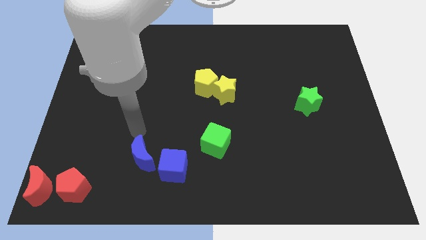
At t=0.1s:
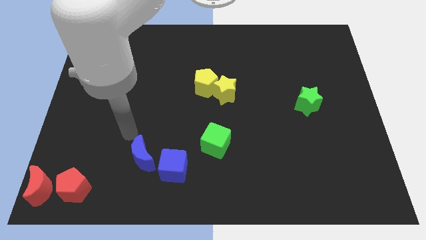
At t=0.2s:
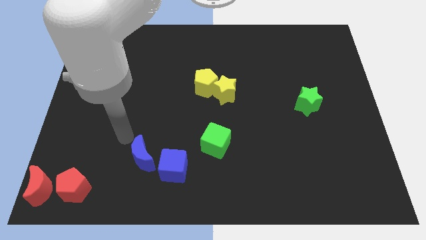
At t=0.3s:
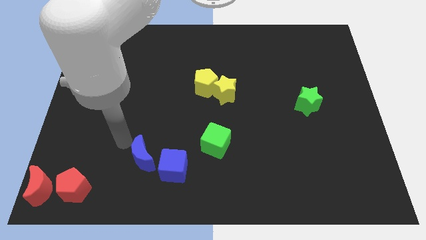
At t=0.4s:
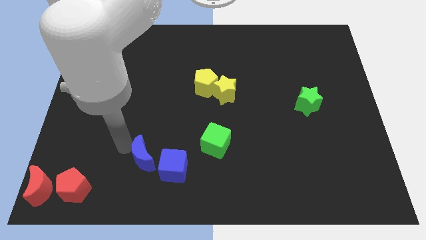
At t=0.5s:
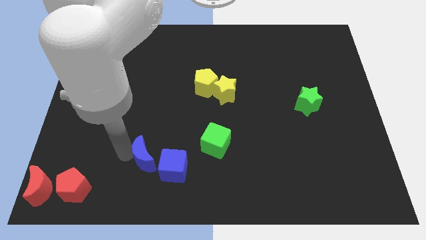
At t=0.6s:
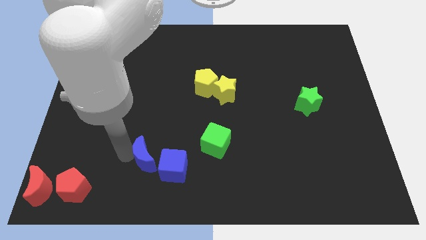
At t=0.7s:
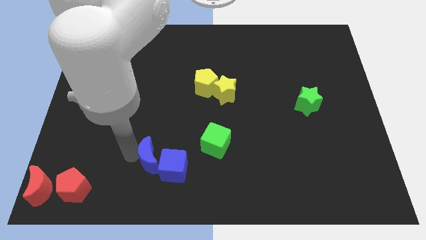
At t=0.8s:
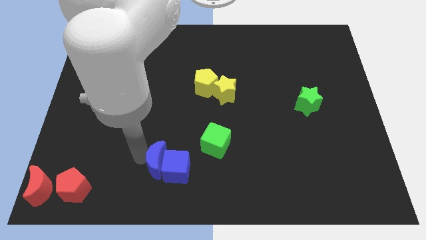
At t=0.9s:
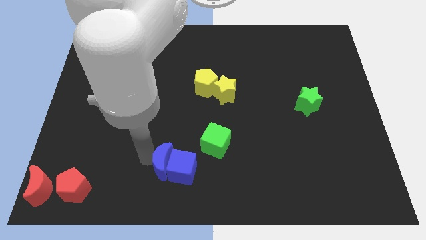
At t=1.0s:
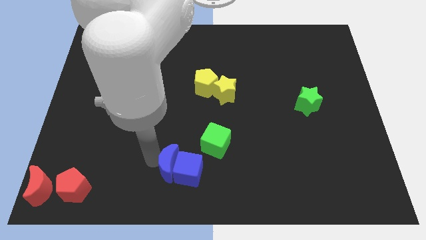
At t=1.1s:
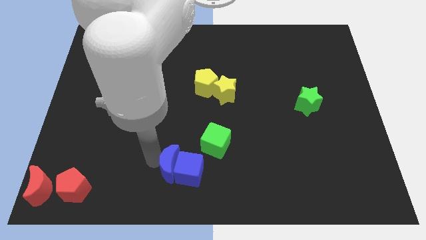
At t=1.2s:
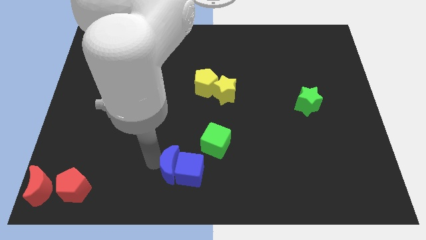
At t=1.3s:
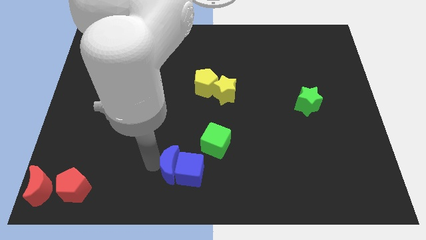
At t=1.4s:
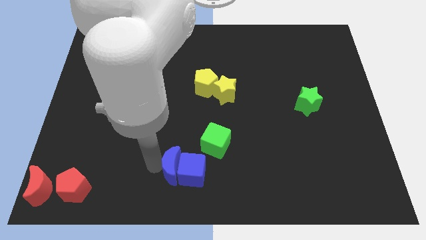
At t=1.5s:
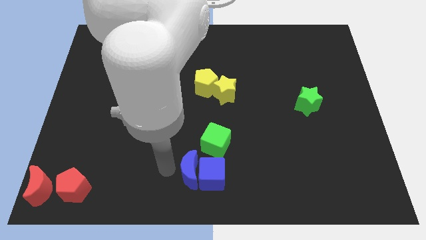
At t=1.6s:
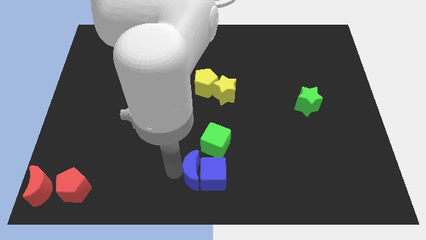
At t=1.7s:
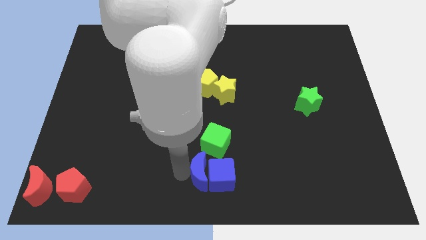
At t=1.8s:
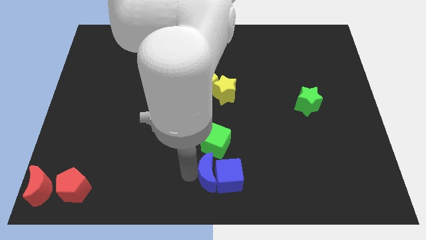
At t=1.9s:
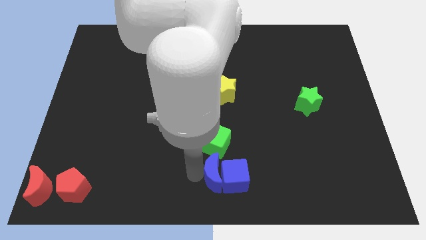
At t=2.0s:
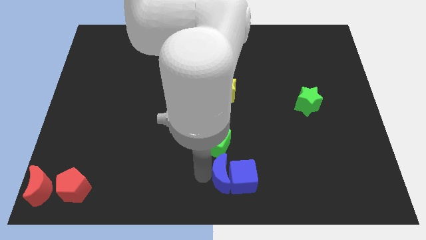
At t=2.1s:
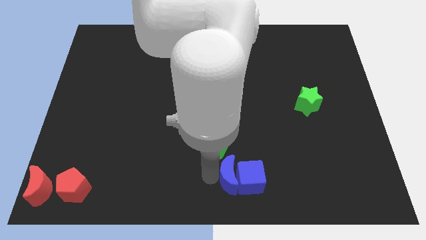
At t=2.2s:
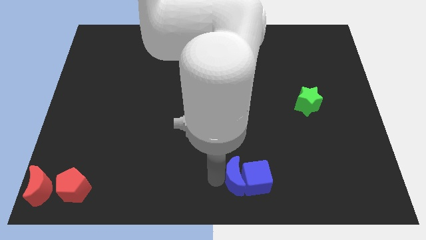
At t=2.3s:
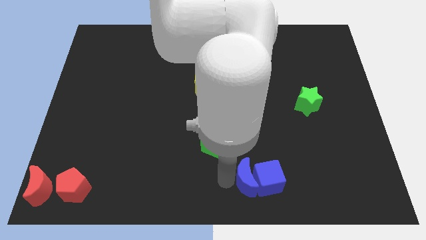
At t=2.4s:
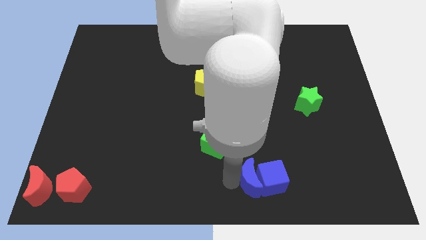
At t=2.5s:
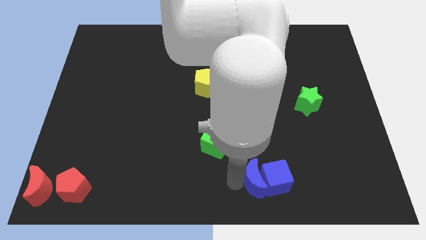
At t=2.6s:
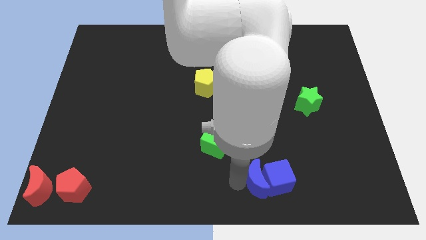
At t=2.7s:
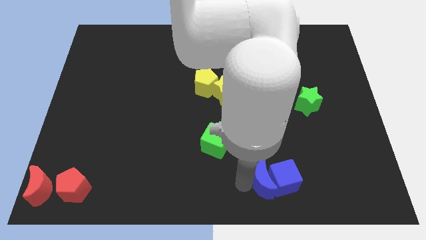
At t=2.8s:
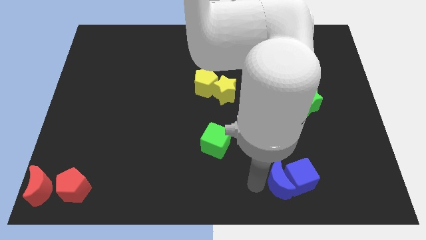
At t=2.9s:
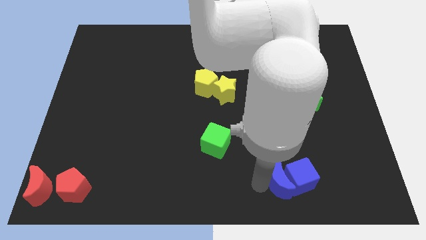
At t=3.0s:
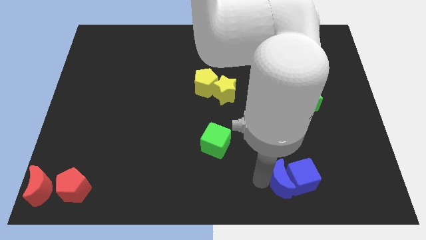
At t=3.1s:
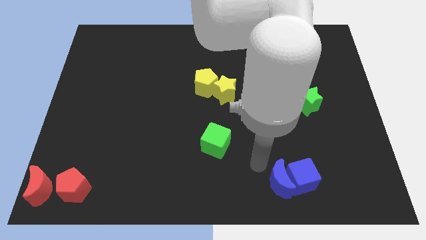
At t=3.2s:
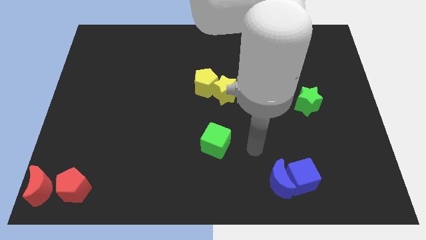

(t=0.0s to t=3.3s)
push the blue cube towards the bottom right corner with the blue moon

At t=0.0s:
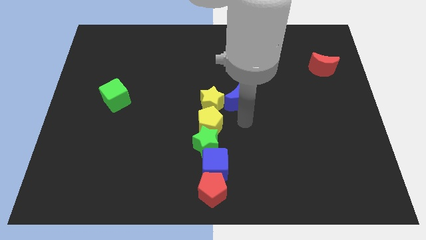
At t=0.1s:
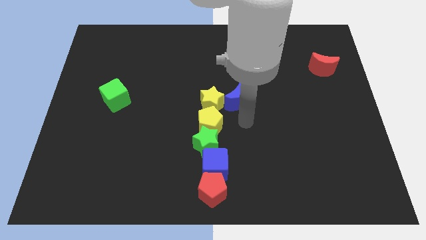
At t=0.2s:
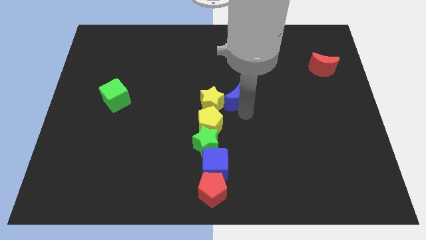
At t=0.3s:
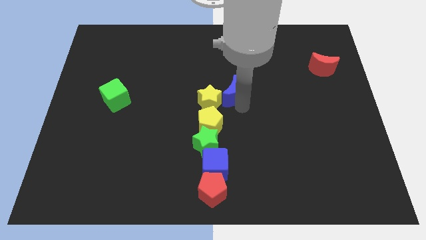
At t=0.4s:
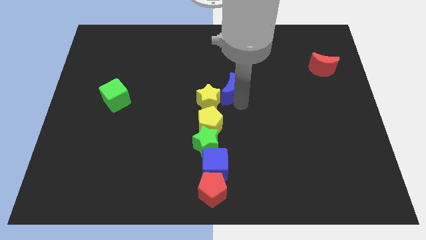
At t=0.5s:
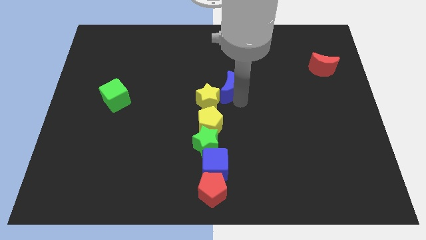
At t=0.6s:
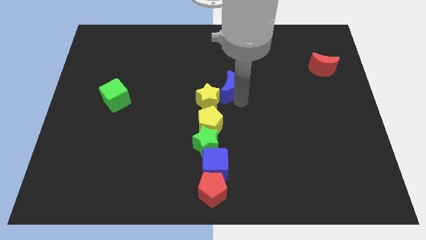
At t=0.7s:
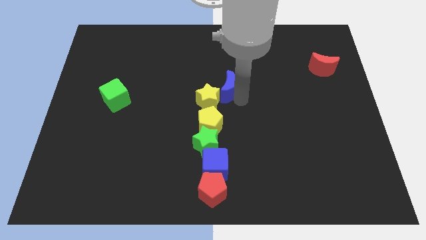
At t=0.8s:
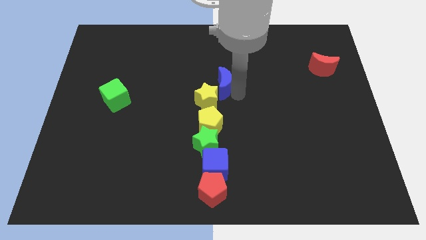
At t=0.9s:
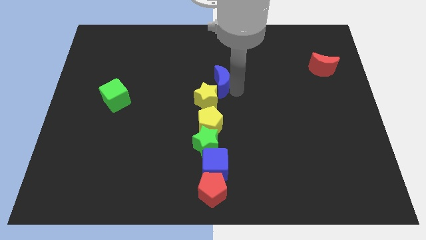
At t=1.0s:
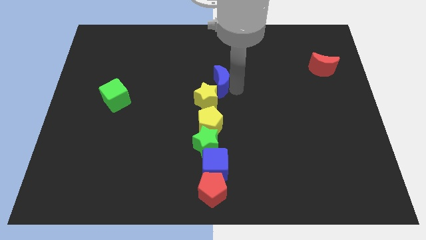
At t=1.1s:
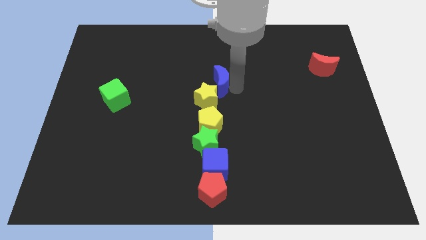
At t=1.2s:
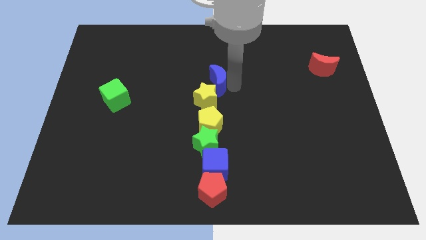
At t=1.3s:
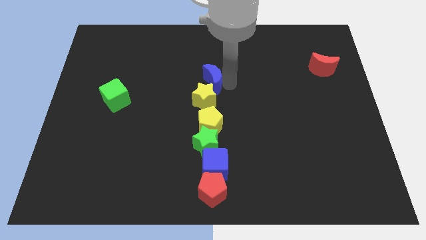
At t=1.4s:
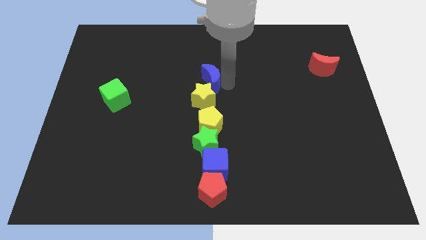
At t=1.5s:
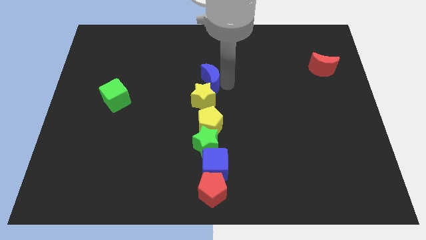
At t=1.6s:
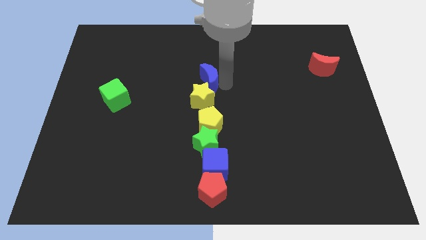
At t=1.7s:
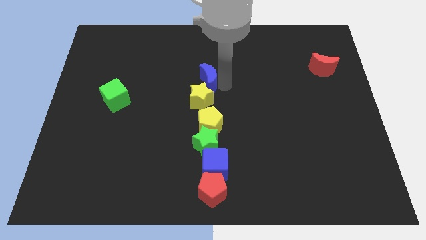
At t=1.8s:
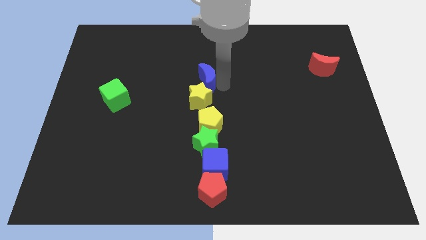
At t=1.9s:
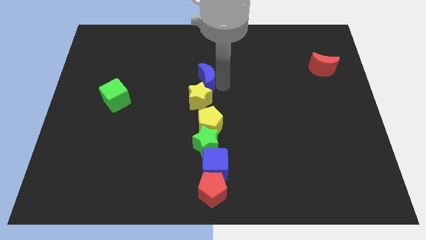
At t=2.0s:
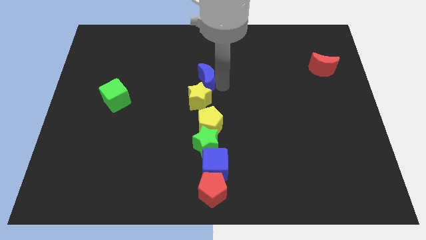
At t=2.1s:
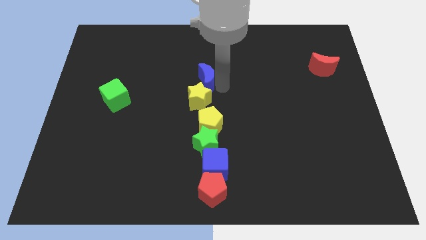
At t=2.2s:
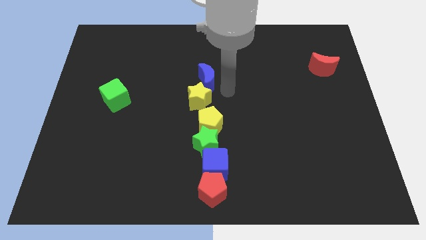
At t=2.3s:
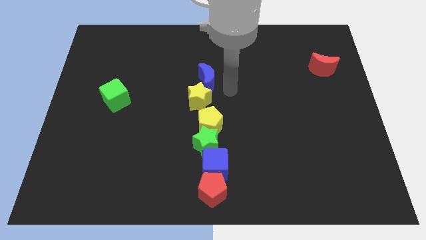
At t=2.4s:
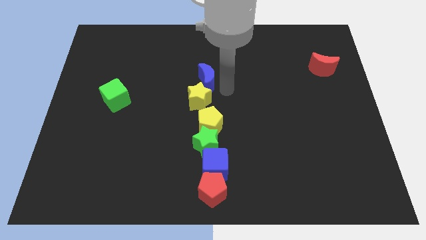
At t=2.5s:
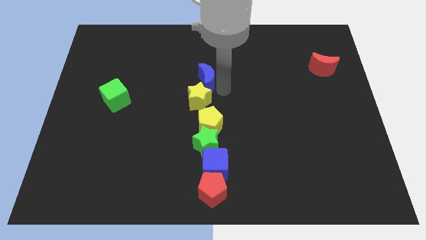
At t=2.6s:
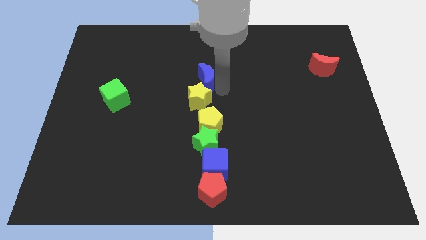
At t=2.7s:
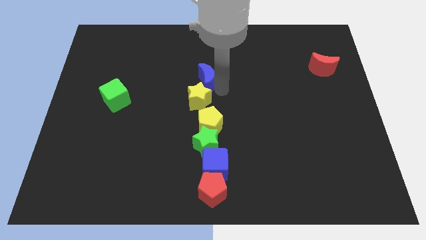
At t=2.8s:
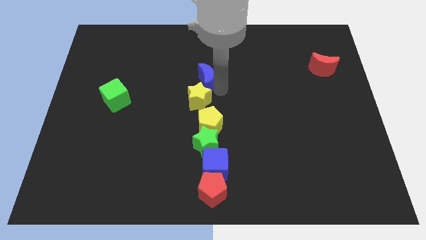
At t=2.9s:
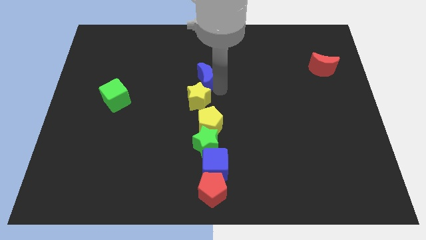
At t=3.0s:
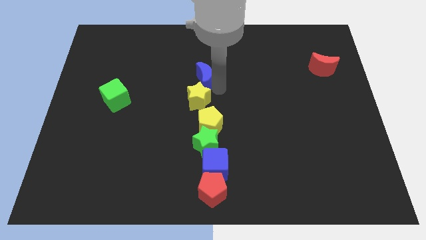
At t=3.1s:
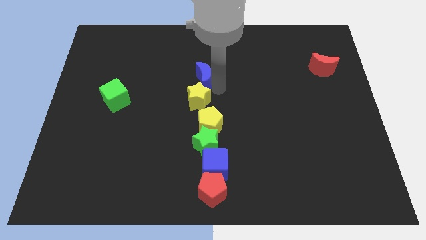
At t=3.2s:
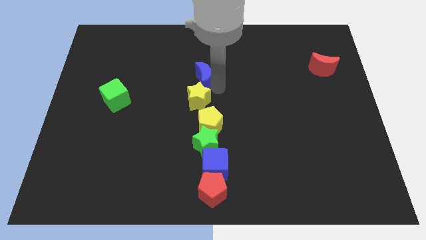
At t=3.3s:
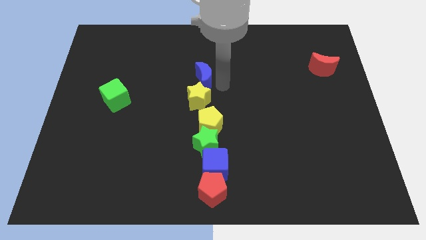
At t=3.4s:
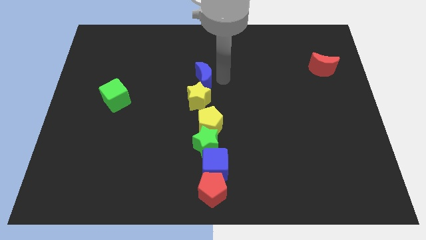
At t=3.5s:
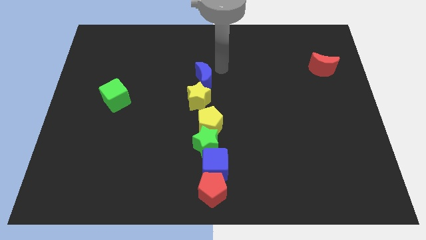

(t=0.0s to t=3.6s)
put the blue moon to the top side of the yellow star

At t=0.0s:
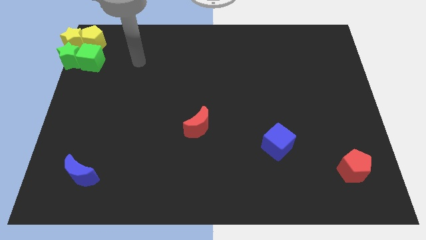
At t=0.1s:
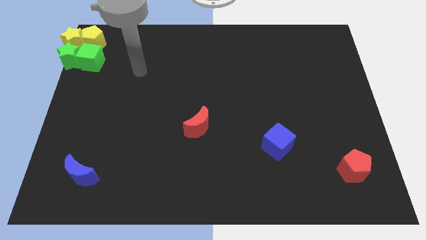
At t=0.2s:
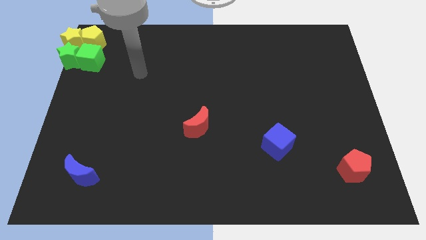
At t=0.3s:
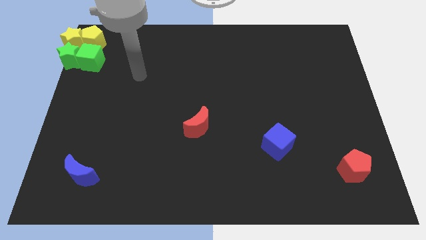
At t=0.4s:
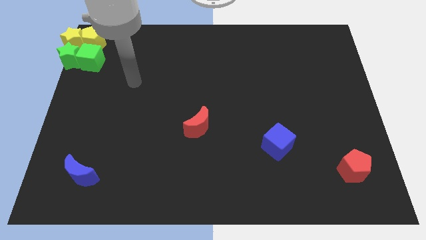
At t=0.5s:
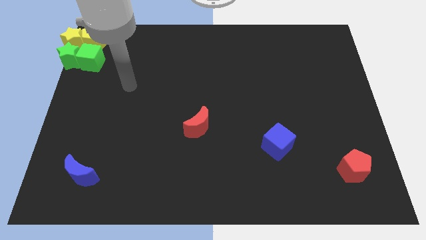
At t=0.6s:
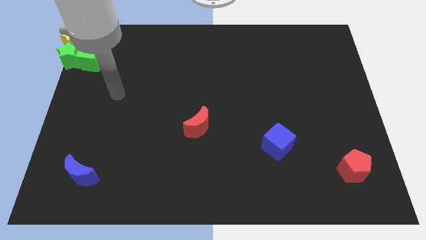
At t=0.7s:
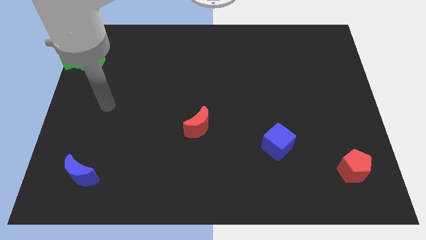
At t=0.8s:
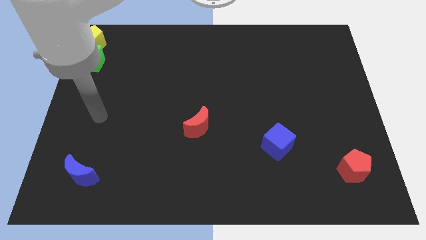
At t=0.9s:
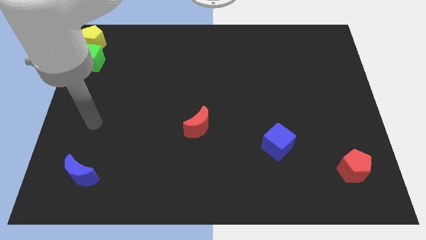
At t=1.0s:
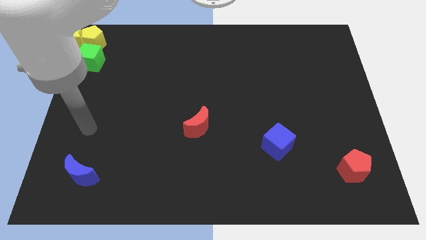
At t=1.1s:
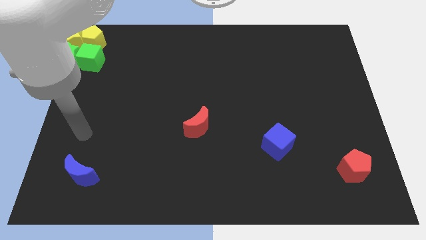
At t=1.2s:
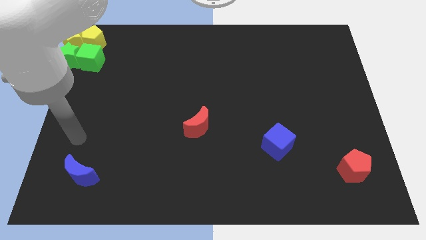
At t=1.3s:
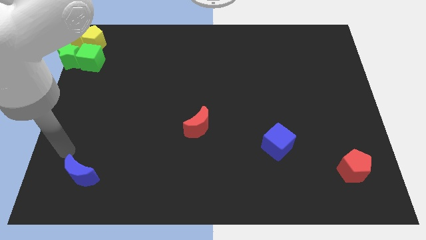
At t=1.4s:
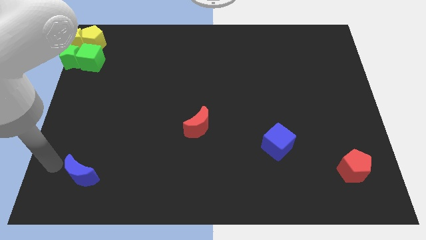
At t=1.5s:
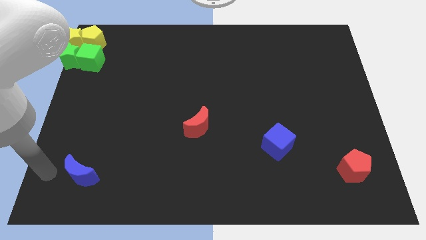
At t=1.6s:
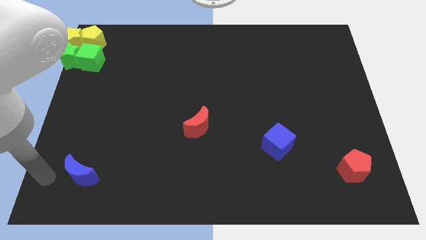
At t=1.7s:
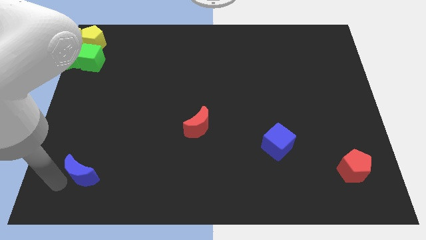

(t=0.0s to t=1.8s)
point your arm at the left side of the blue crescent

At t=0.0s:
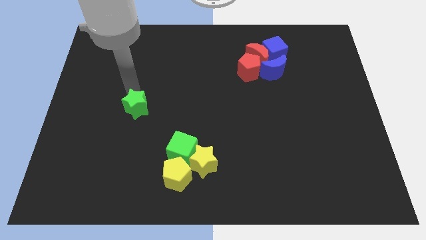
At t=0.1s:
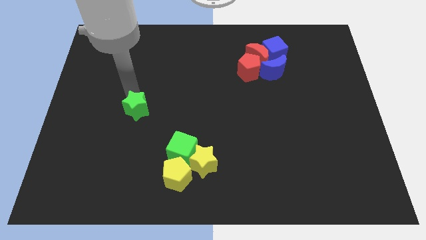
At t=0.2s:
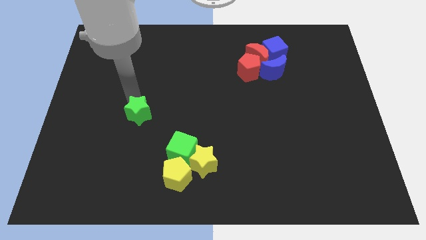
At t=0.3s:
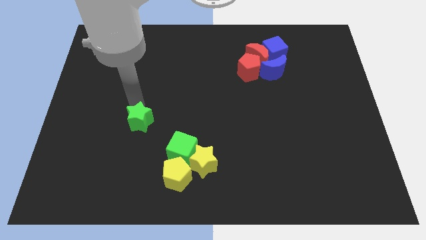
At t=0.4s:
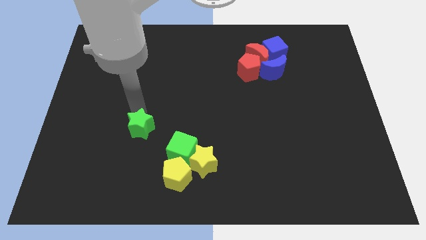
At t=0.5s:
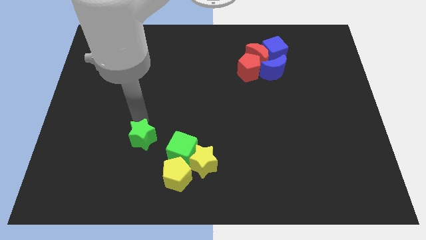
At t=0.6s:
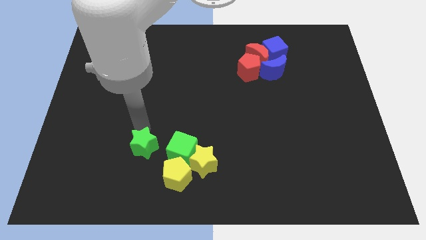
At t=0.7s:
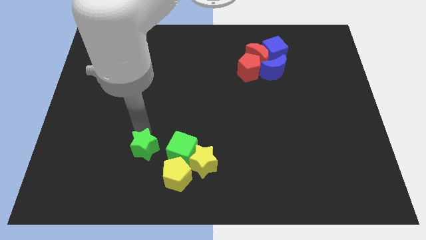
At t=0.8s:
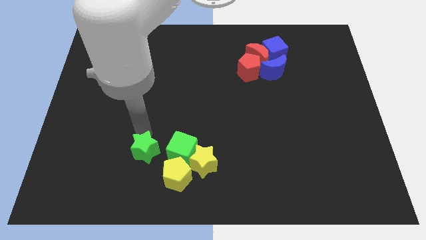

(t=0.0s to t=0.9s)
move the green star to the left of the green cube
